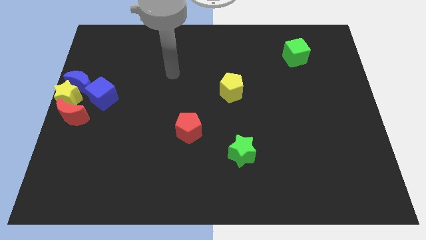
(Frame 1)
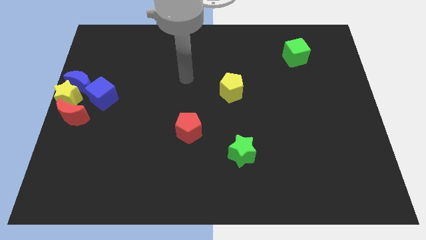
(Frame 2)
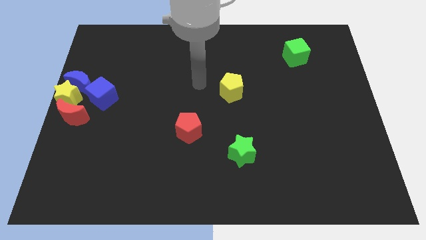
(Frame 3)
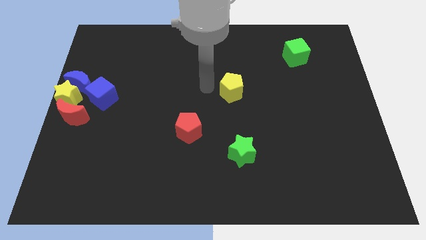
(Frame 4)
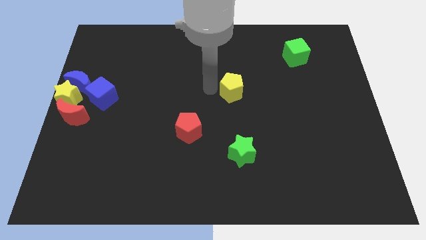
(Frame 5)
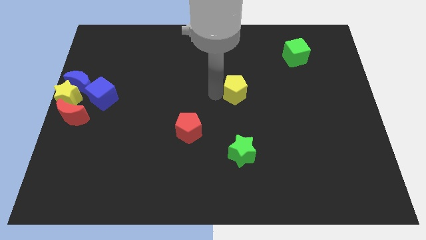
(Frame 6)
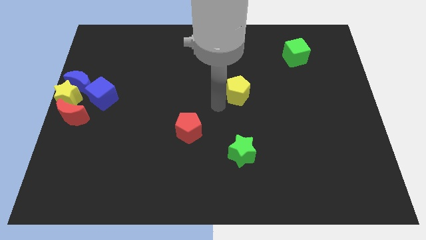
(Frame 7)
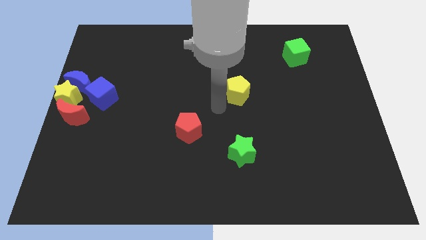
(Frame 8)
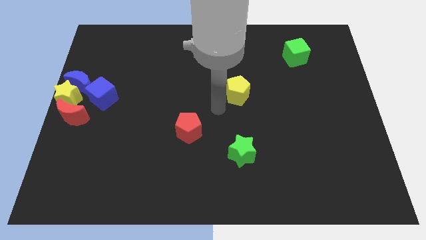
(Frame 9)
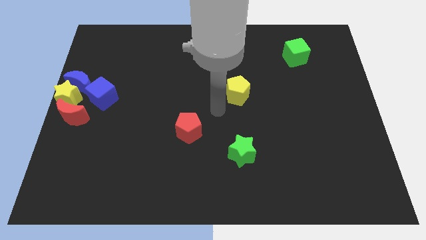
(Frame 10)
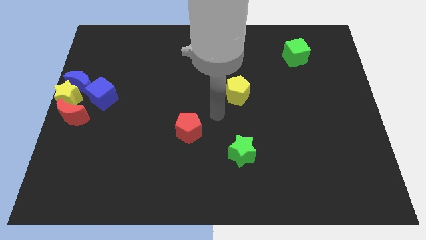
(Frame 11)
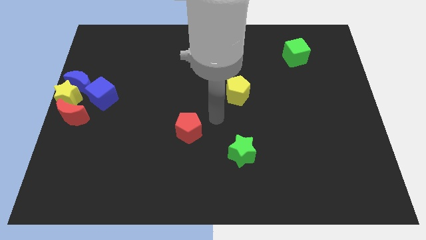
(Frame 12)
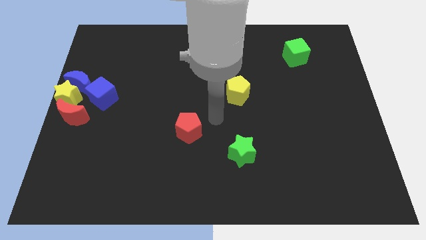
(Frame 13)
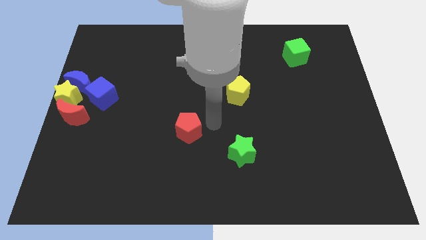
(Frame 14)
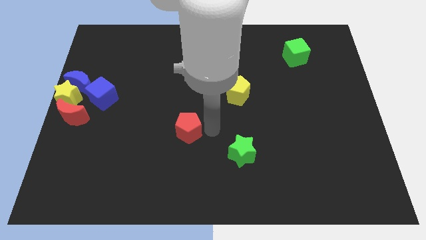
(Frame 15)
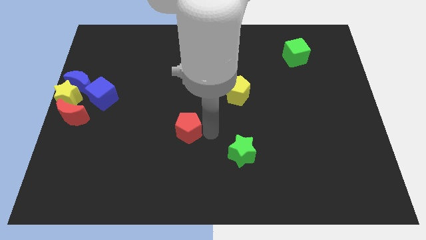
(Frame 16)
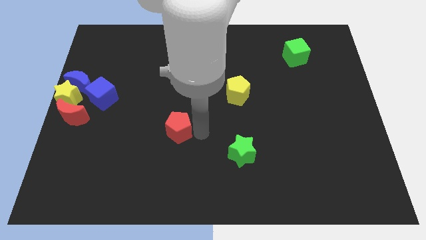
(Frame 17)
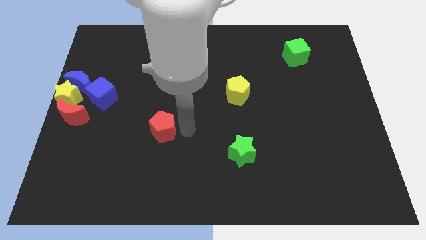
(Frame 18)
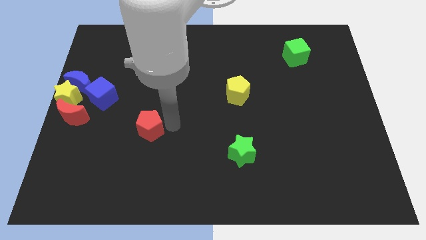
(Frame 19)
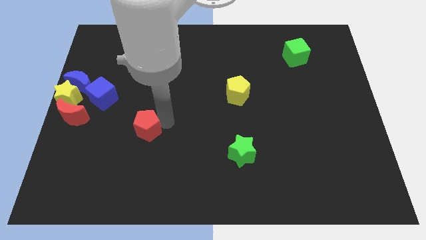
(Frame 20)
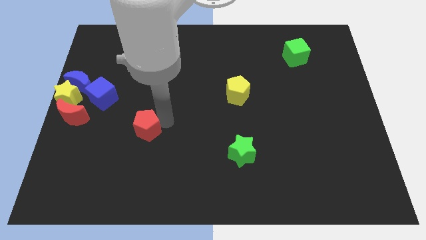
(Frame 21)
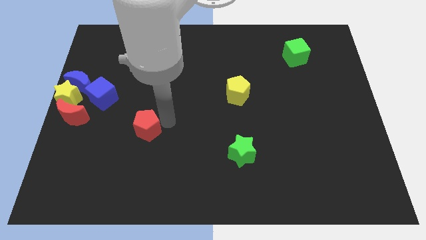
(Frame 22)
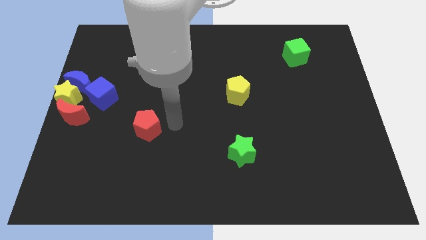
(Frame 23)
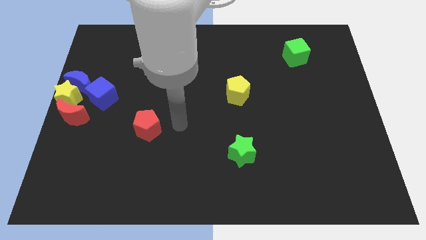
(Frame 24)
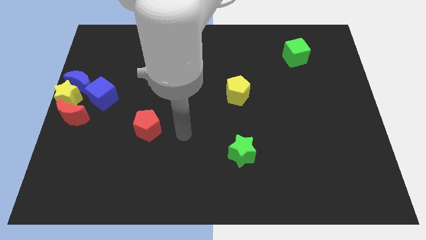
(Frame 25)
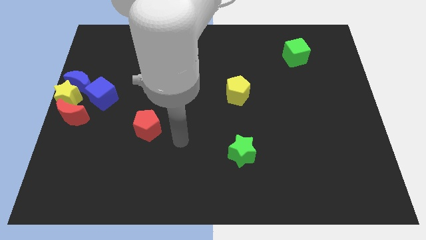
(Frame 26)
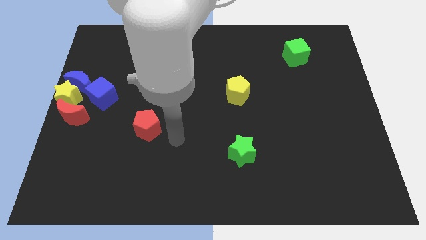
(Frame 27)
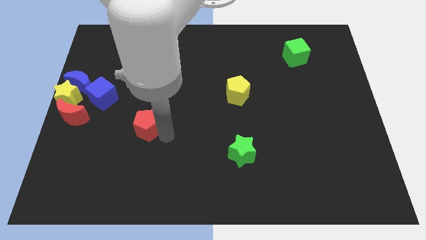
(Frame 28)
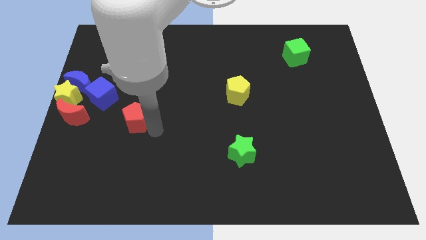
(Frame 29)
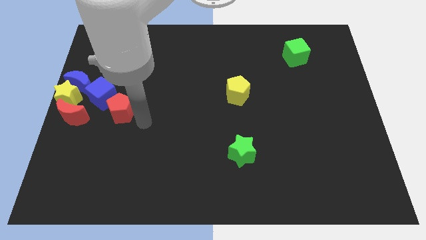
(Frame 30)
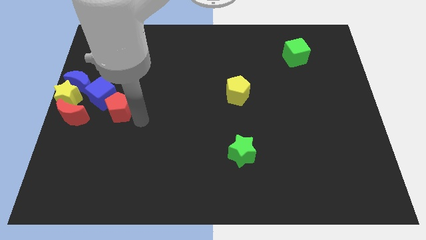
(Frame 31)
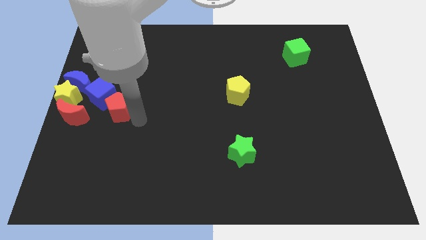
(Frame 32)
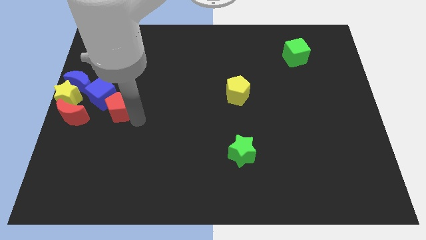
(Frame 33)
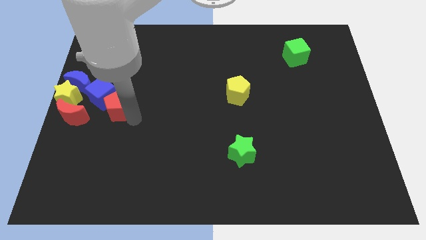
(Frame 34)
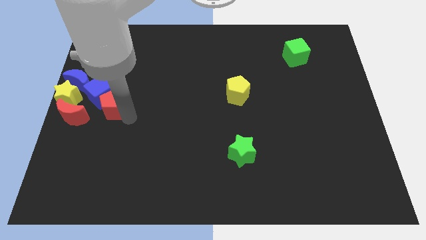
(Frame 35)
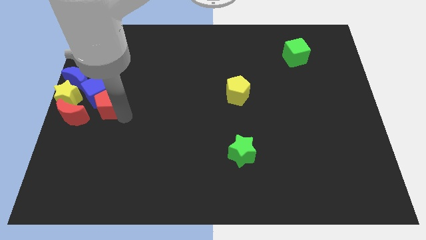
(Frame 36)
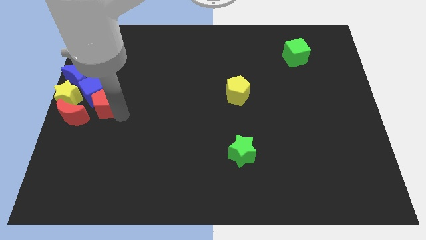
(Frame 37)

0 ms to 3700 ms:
push the red pentagon into the blue cube

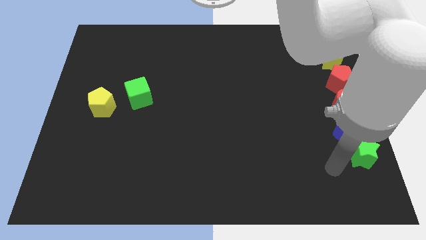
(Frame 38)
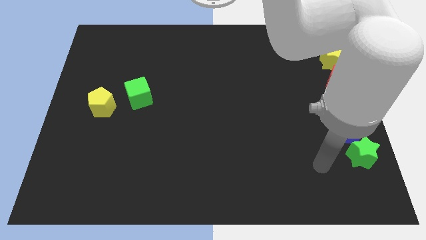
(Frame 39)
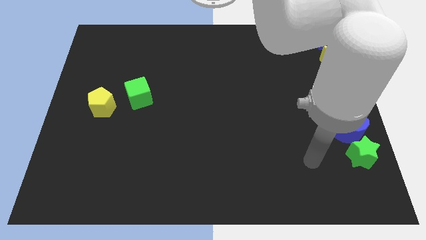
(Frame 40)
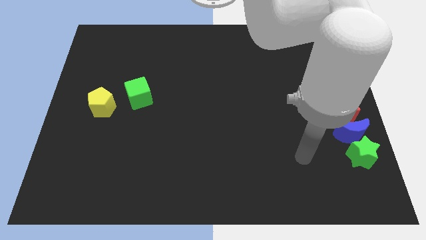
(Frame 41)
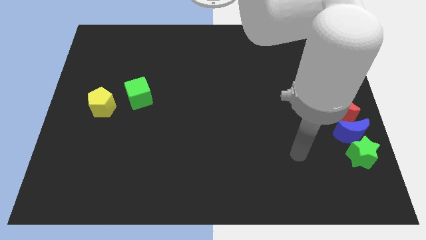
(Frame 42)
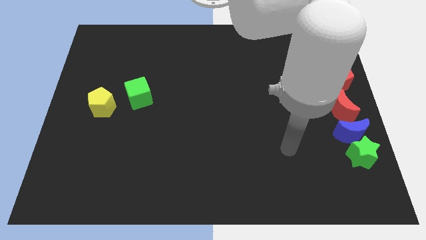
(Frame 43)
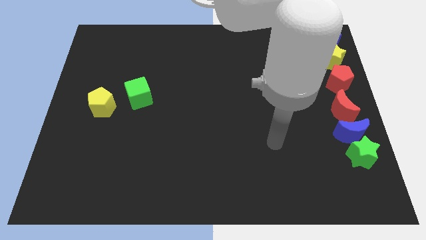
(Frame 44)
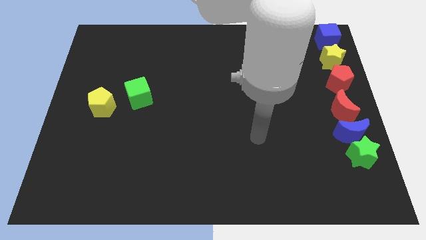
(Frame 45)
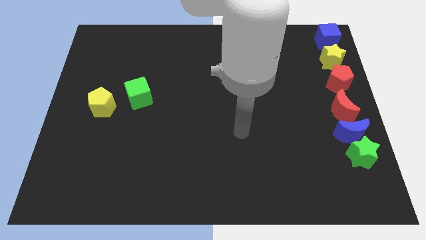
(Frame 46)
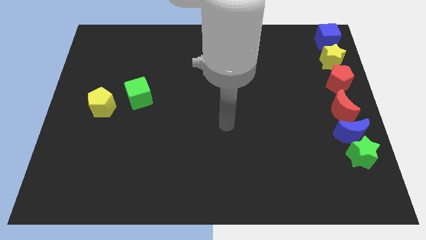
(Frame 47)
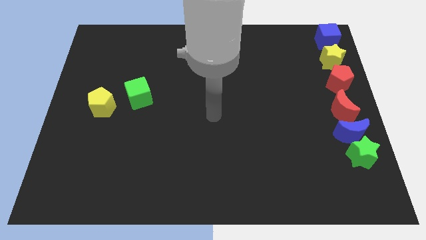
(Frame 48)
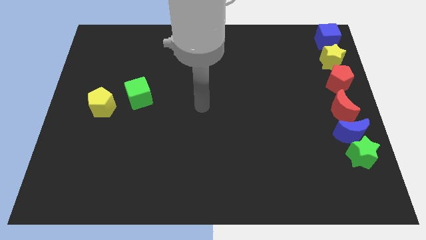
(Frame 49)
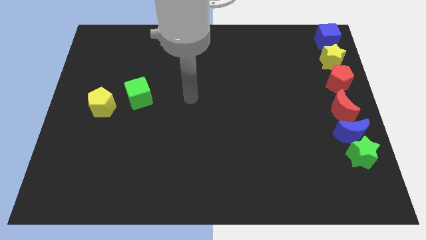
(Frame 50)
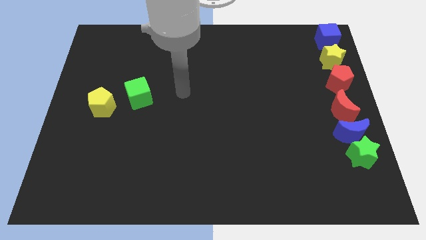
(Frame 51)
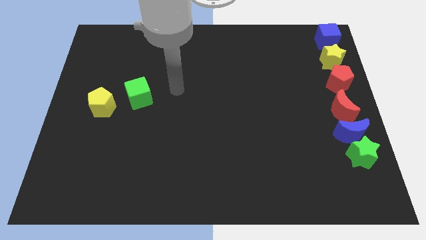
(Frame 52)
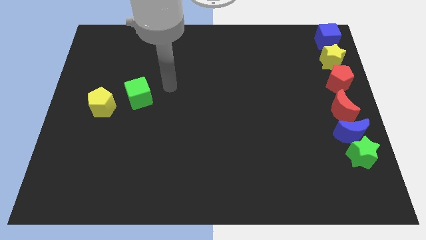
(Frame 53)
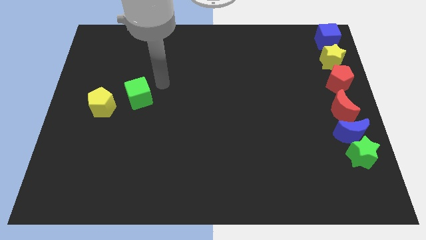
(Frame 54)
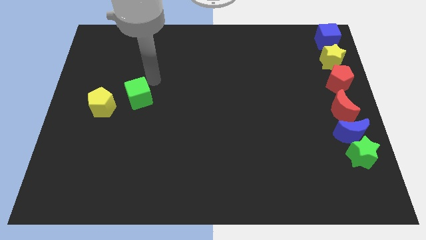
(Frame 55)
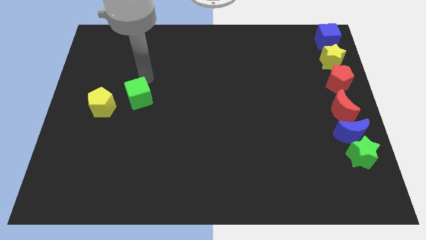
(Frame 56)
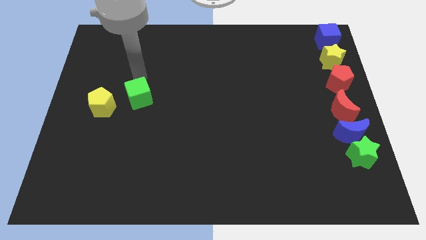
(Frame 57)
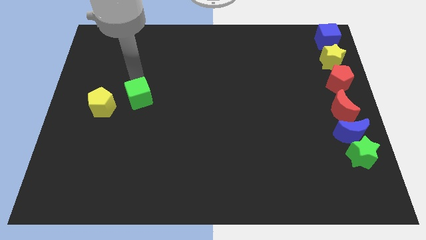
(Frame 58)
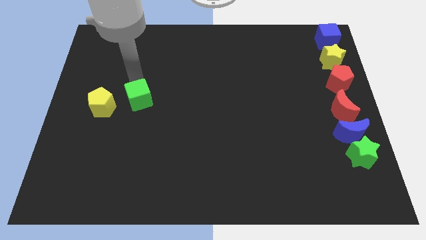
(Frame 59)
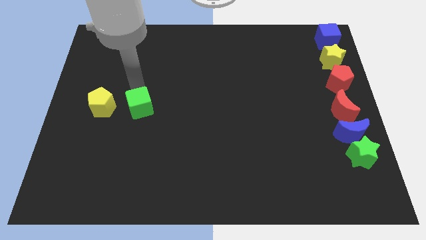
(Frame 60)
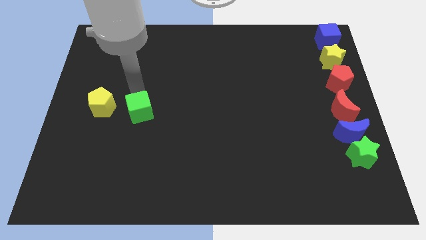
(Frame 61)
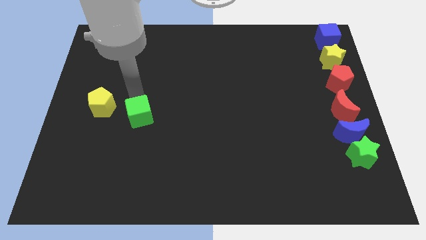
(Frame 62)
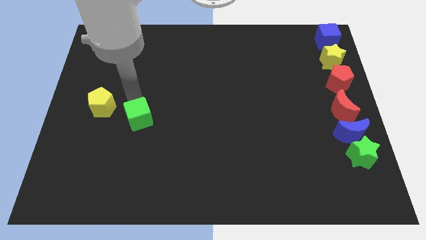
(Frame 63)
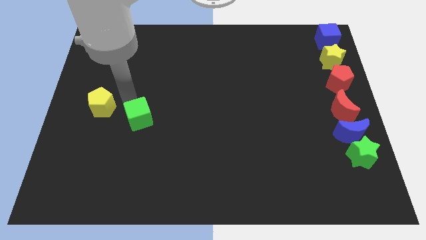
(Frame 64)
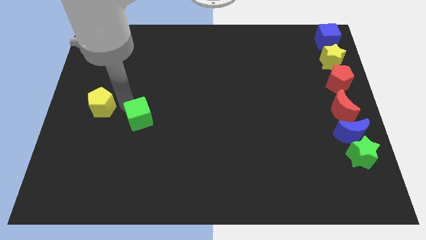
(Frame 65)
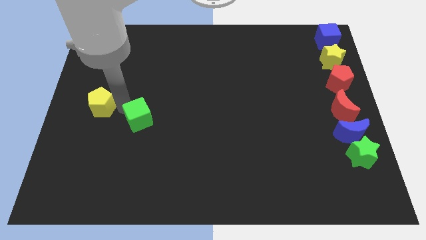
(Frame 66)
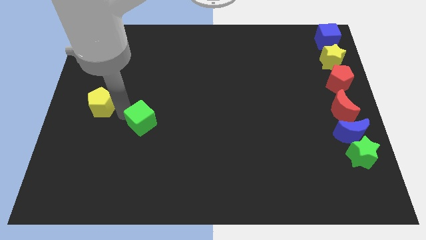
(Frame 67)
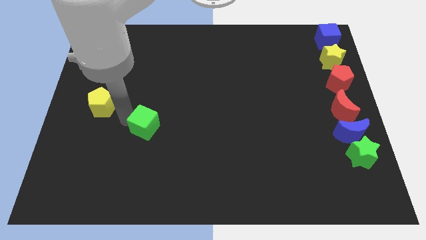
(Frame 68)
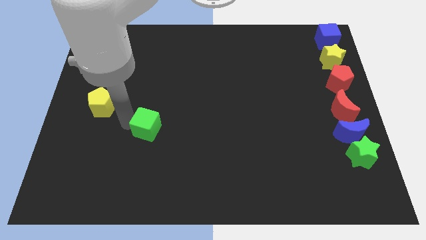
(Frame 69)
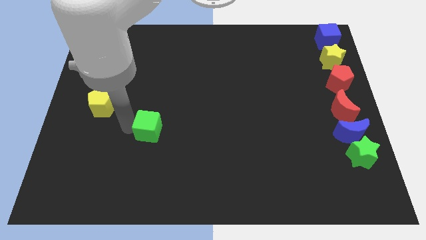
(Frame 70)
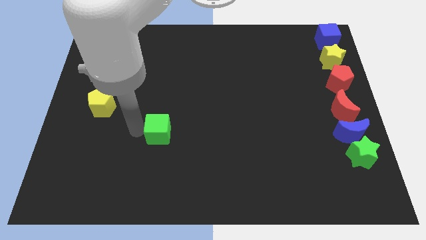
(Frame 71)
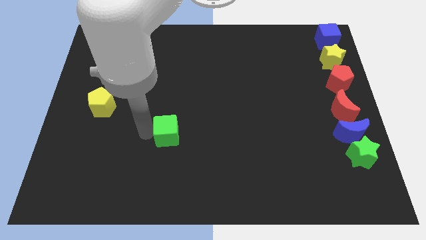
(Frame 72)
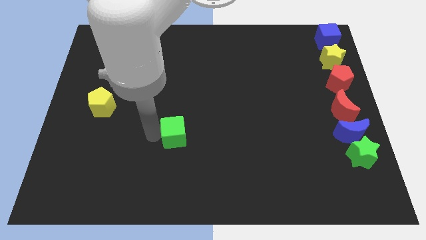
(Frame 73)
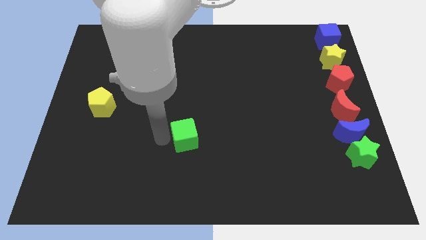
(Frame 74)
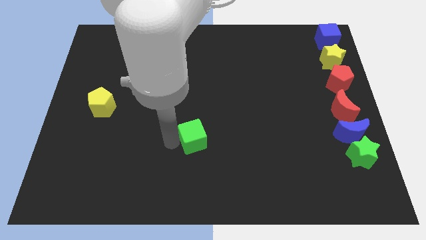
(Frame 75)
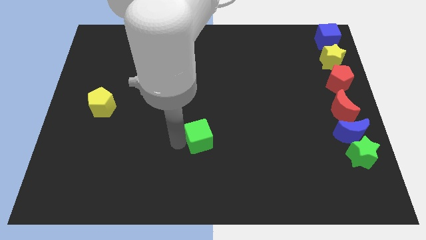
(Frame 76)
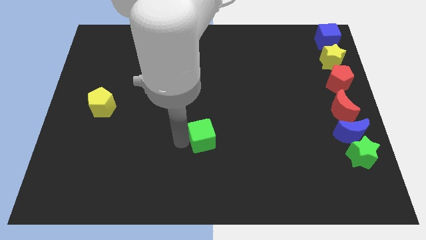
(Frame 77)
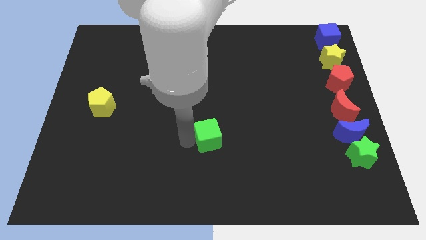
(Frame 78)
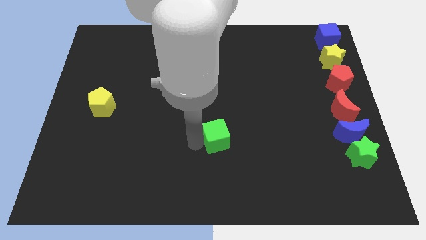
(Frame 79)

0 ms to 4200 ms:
drag the green cube diagonally bottom right to the yellow pentagon

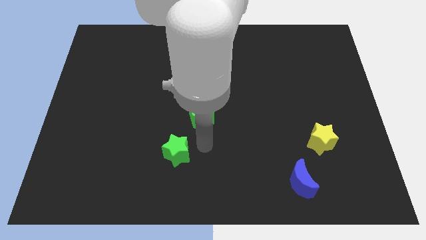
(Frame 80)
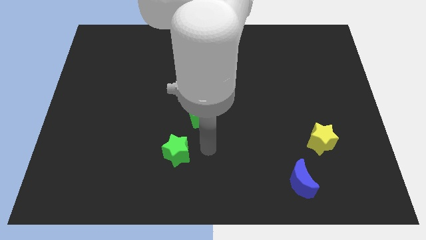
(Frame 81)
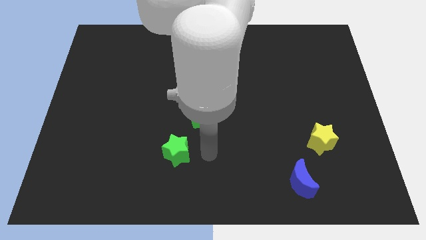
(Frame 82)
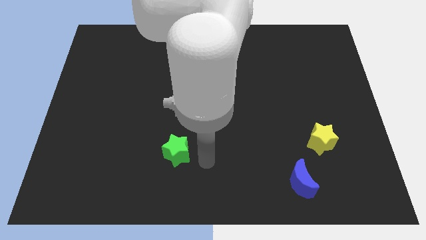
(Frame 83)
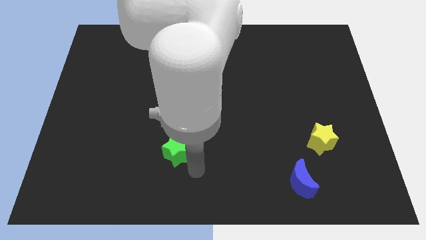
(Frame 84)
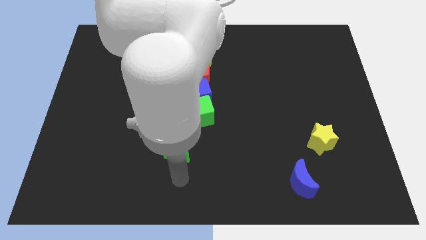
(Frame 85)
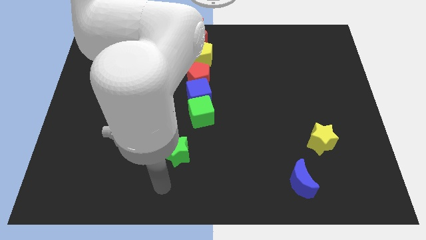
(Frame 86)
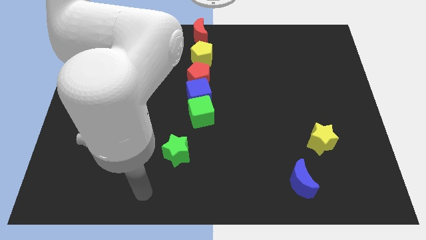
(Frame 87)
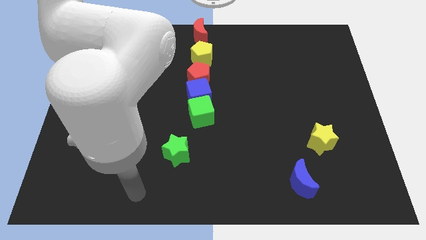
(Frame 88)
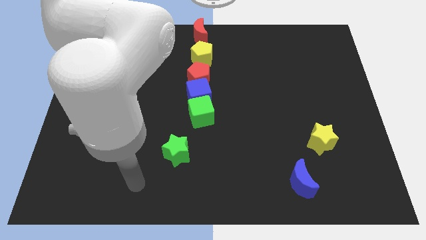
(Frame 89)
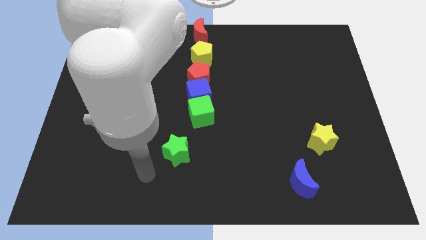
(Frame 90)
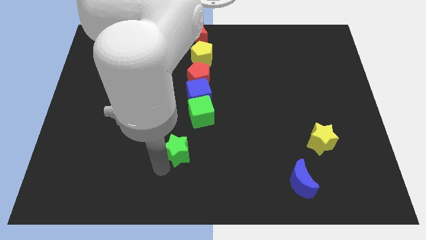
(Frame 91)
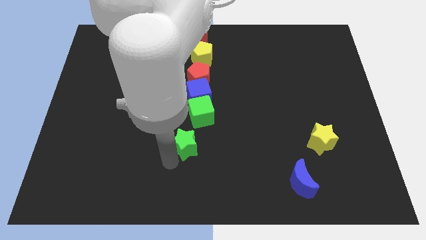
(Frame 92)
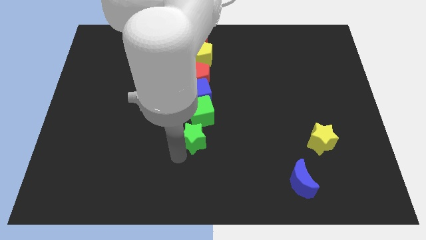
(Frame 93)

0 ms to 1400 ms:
push the green star below the green cube
